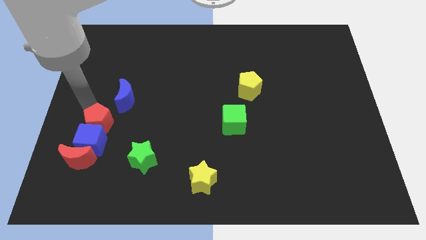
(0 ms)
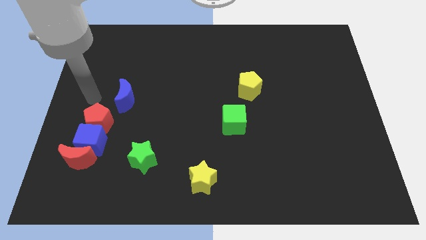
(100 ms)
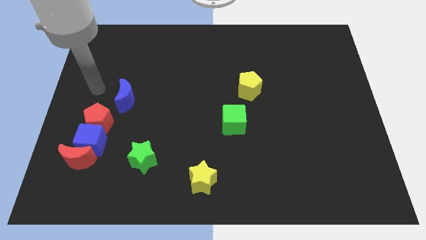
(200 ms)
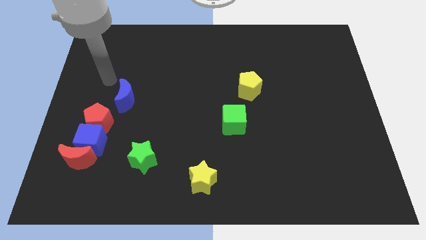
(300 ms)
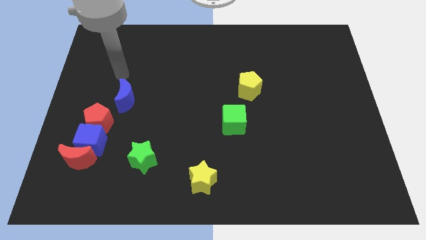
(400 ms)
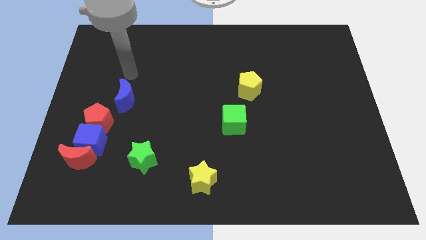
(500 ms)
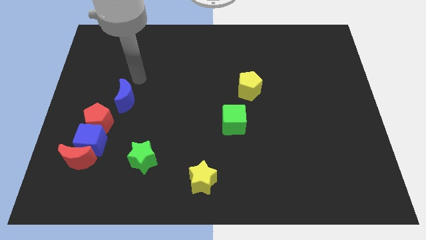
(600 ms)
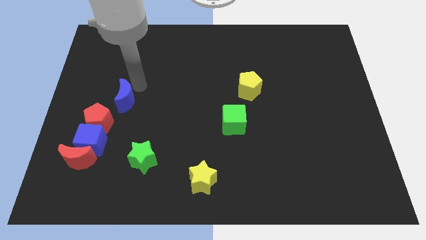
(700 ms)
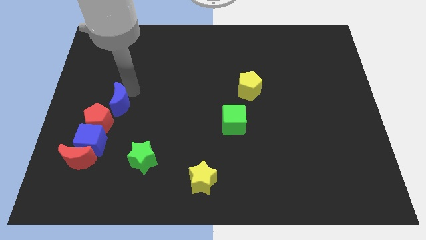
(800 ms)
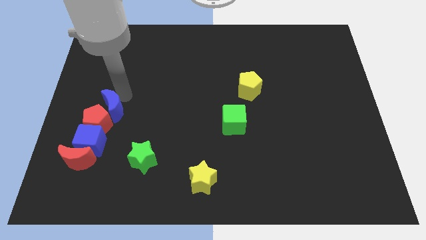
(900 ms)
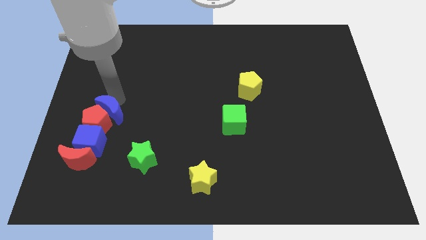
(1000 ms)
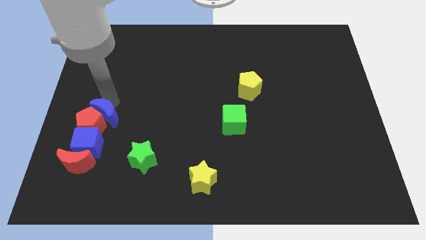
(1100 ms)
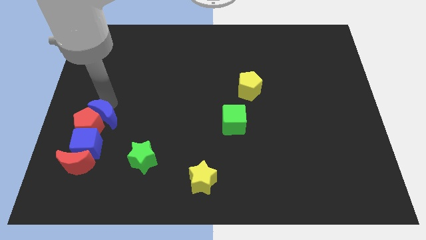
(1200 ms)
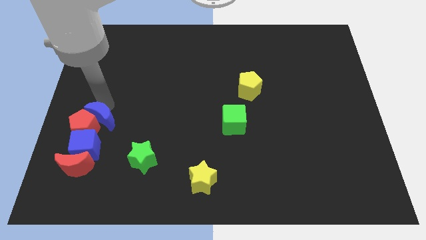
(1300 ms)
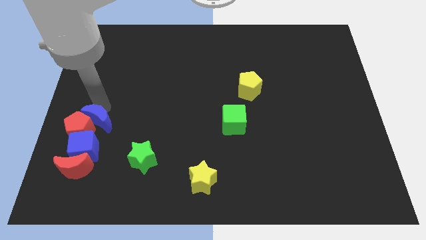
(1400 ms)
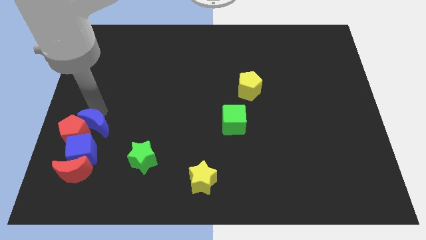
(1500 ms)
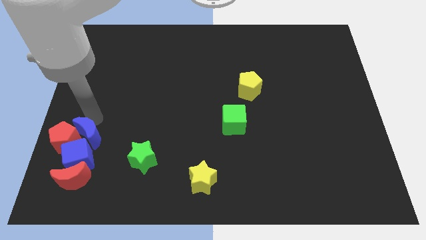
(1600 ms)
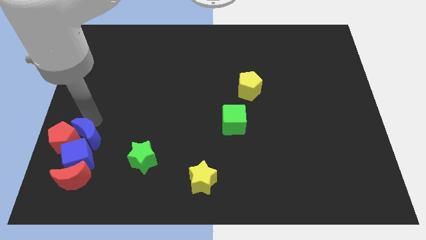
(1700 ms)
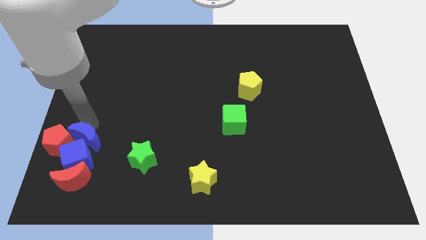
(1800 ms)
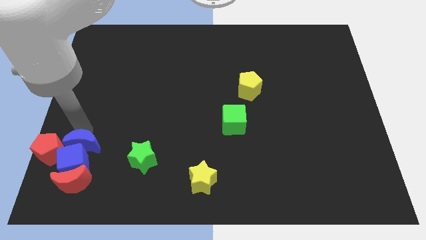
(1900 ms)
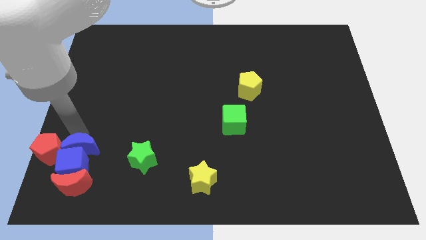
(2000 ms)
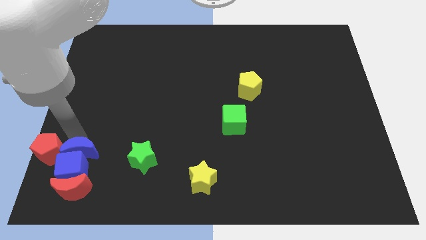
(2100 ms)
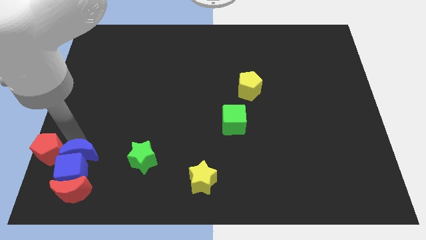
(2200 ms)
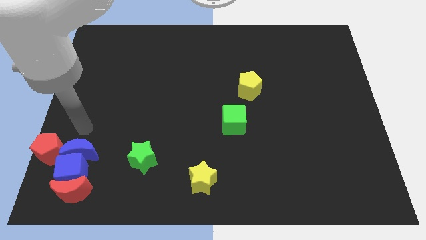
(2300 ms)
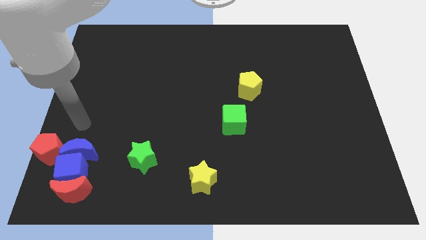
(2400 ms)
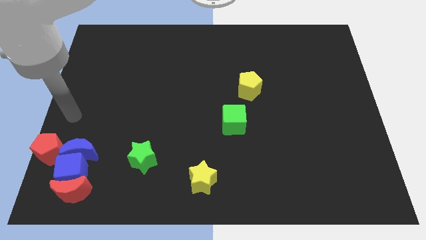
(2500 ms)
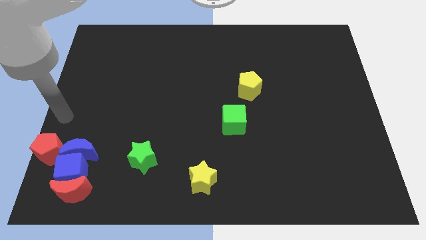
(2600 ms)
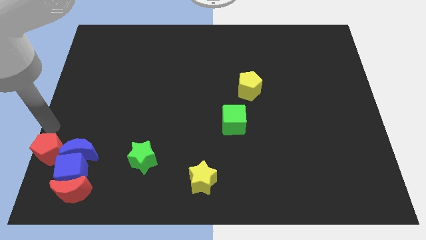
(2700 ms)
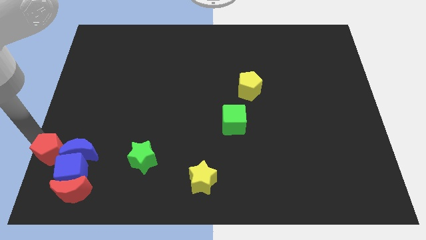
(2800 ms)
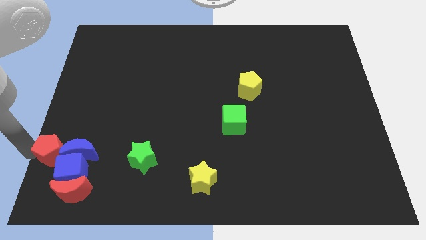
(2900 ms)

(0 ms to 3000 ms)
slightly push the blue moon into the group of objects

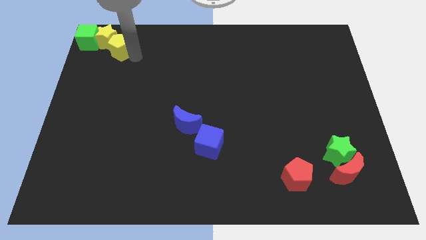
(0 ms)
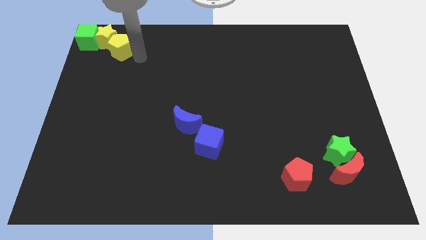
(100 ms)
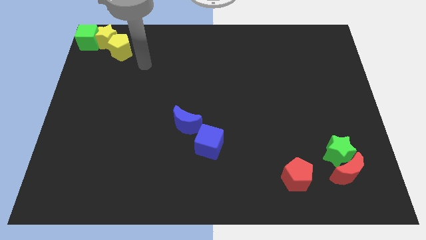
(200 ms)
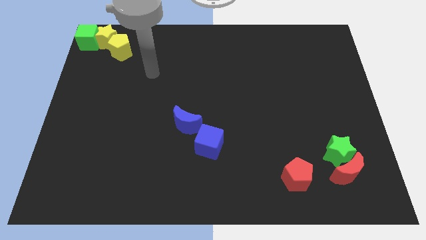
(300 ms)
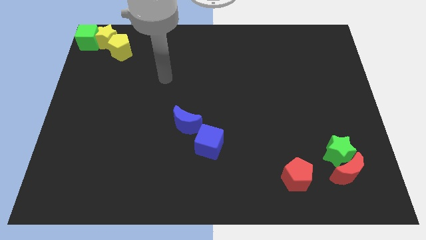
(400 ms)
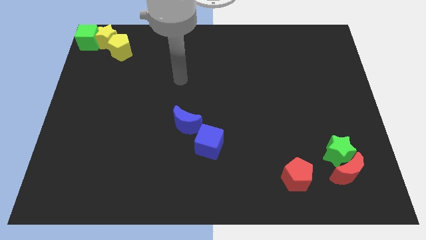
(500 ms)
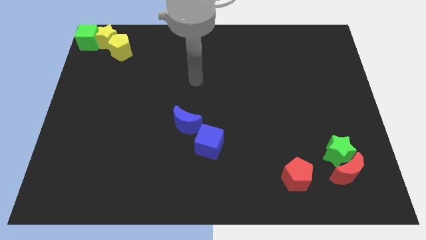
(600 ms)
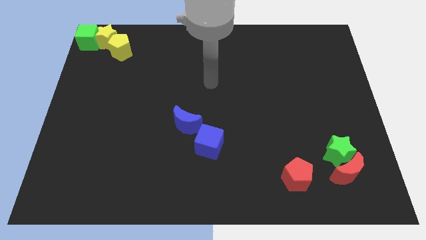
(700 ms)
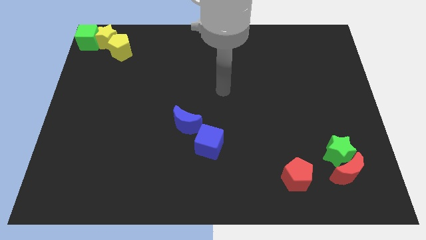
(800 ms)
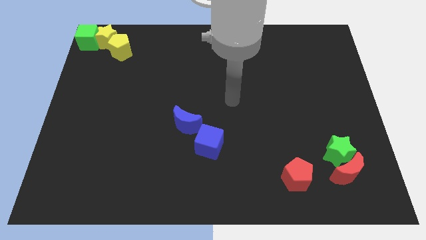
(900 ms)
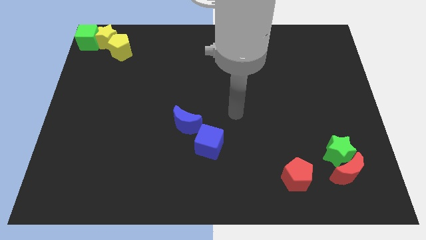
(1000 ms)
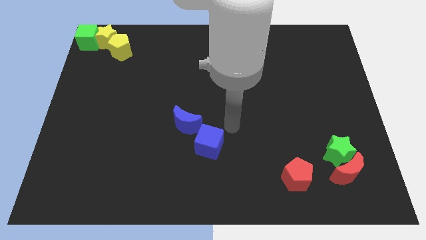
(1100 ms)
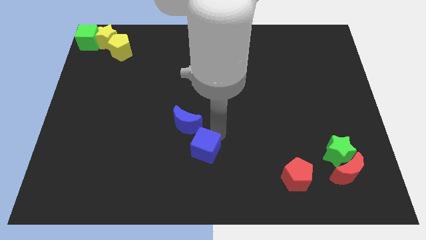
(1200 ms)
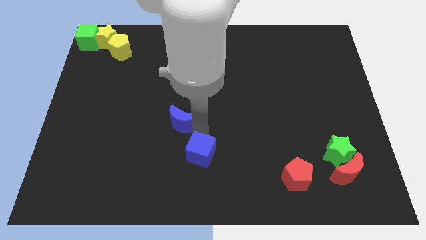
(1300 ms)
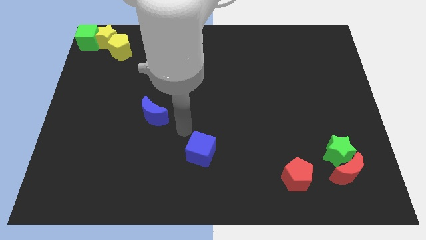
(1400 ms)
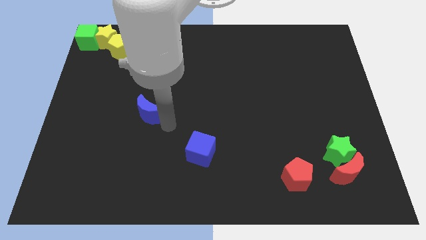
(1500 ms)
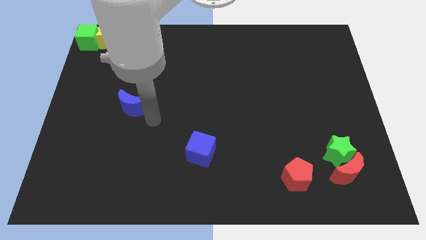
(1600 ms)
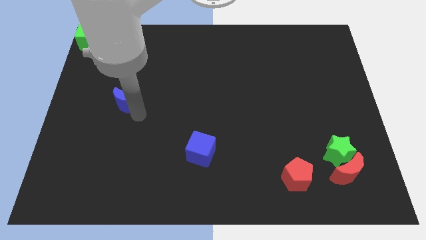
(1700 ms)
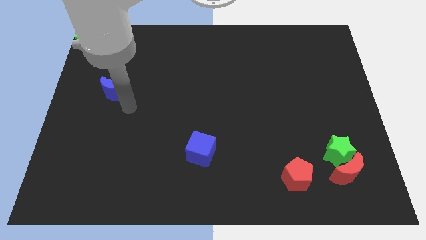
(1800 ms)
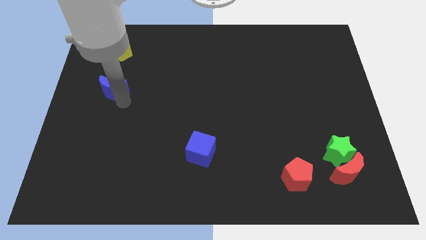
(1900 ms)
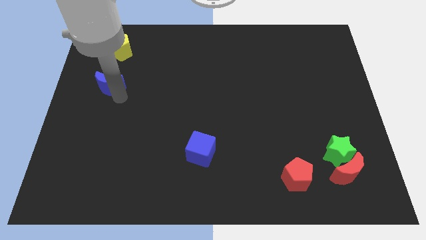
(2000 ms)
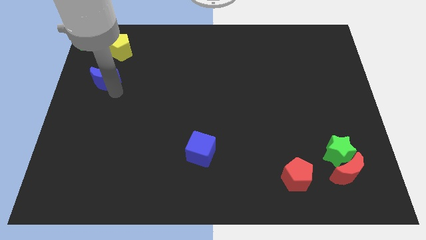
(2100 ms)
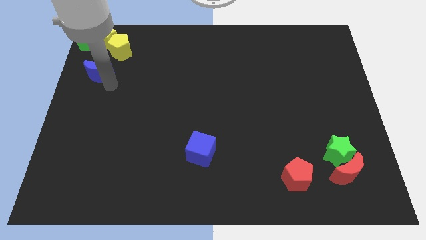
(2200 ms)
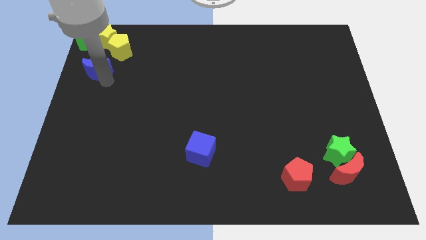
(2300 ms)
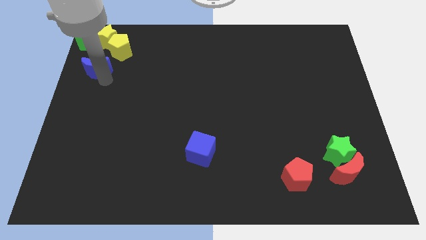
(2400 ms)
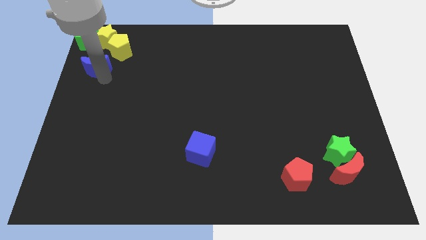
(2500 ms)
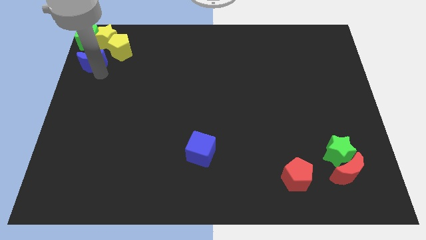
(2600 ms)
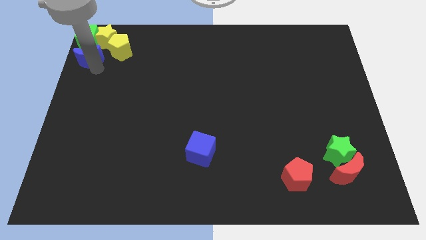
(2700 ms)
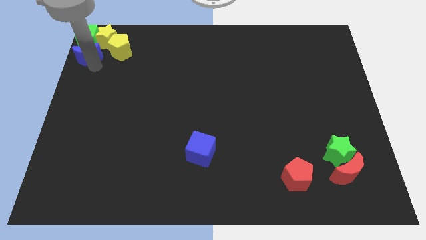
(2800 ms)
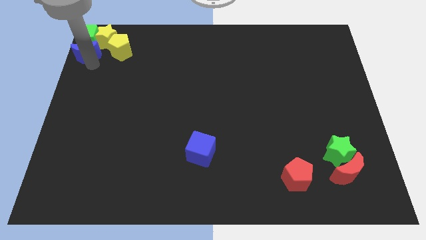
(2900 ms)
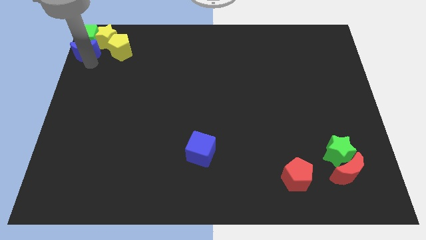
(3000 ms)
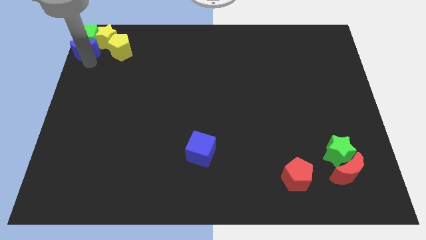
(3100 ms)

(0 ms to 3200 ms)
arrange the blue moon at the bottom of the green cube

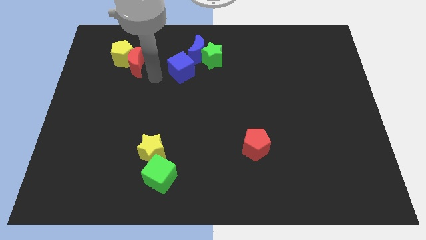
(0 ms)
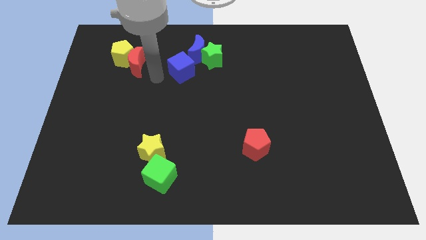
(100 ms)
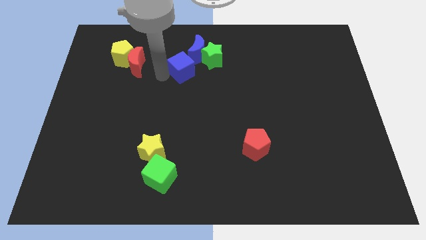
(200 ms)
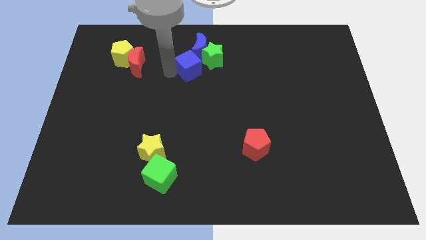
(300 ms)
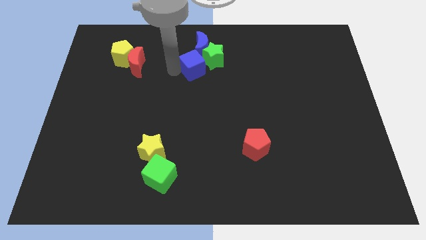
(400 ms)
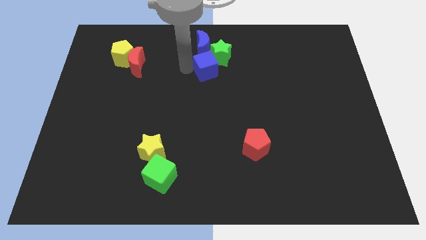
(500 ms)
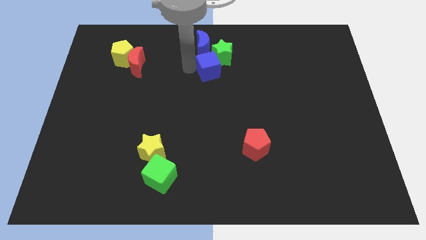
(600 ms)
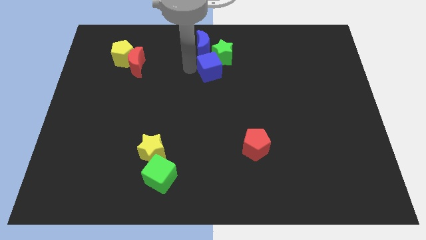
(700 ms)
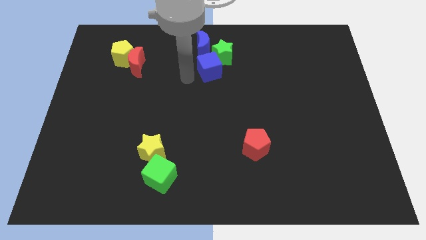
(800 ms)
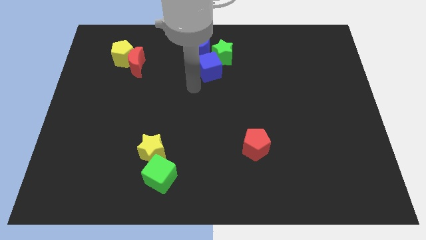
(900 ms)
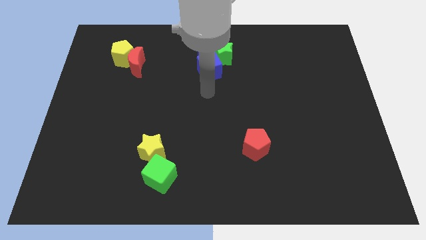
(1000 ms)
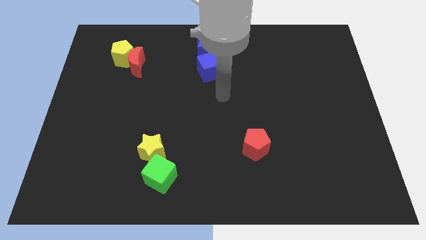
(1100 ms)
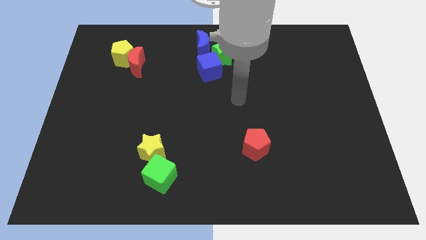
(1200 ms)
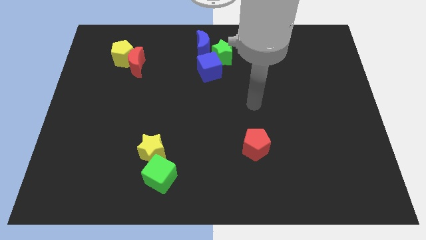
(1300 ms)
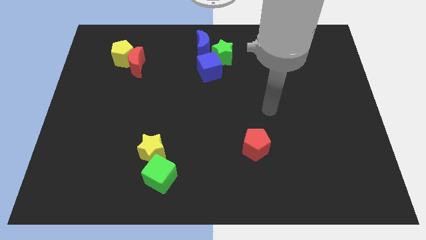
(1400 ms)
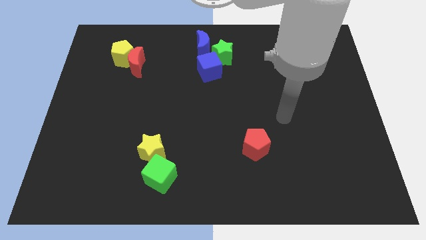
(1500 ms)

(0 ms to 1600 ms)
slide the blue cube into the green star

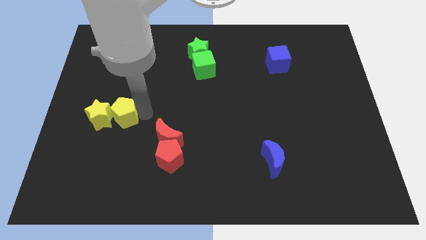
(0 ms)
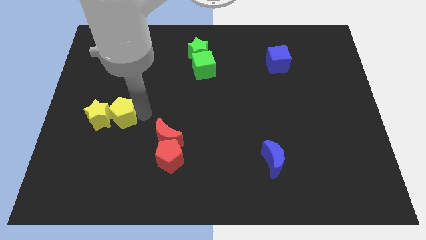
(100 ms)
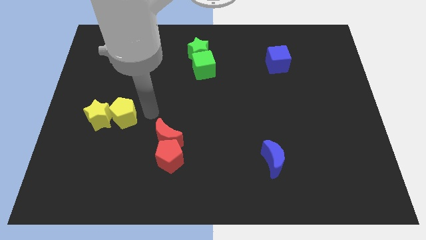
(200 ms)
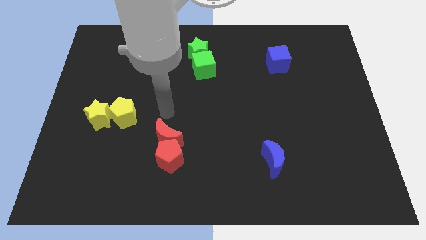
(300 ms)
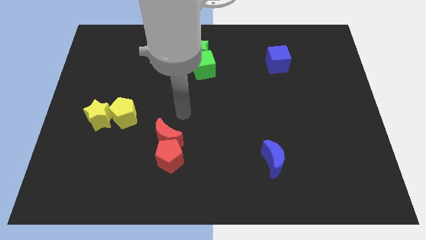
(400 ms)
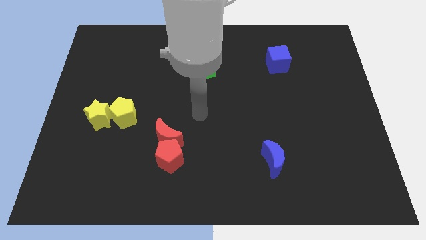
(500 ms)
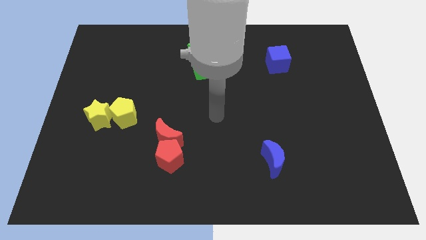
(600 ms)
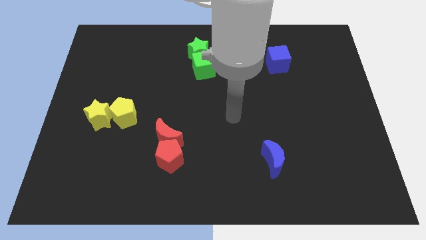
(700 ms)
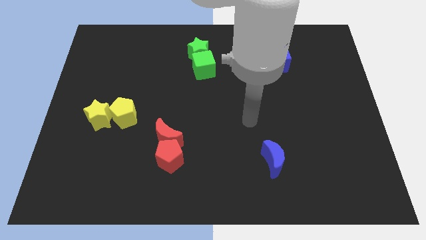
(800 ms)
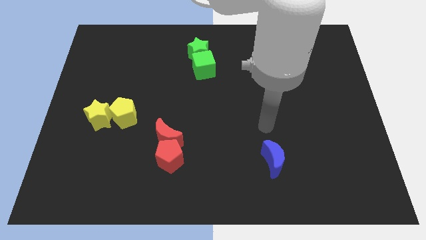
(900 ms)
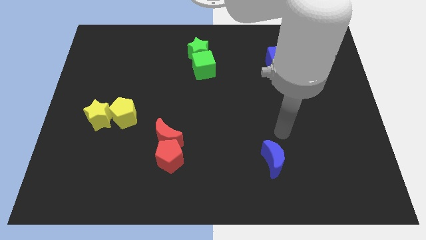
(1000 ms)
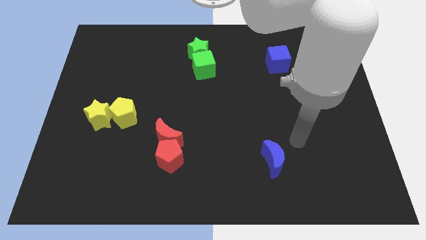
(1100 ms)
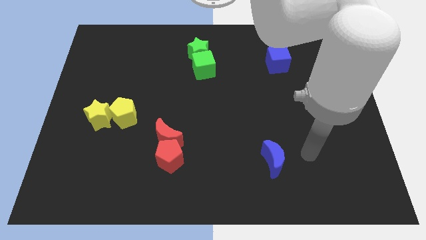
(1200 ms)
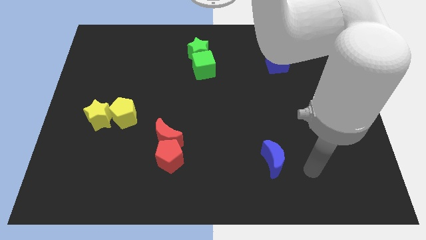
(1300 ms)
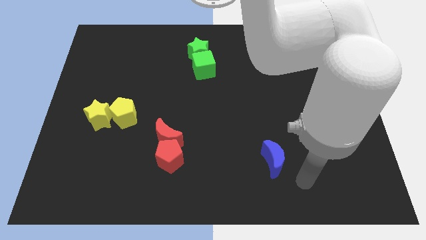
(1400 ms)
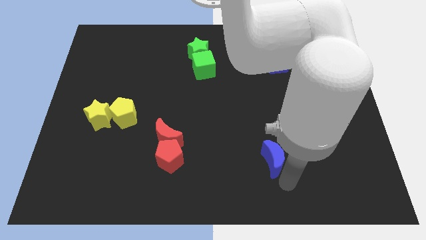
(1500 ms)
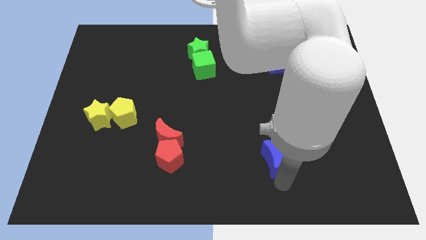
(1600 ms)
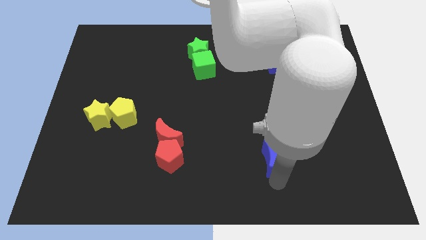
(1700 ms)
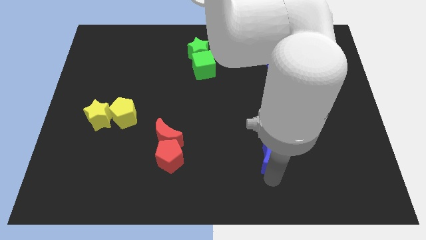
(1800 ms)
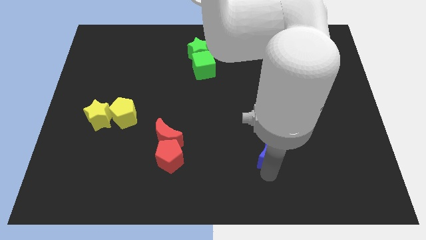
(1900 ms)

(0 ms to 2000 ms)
move the blue moon towards the top side of the board
